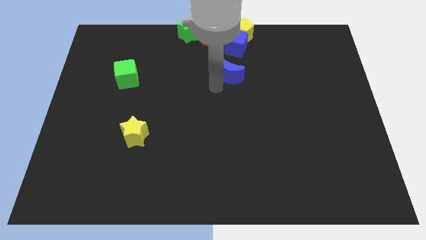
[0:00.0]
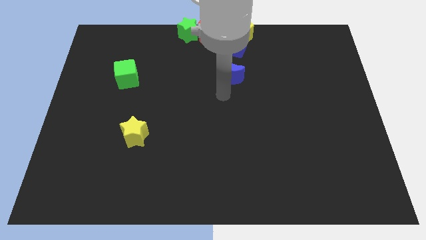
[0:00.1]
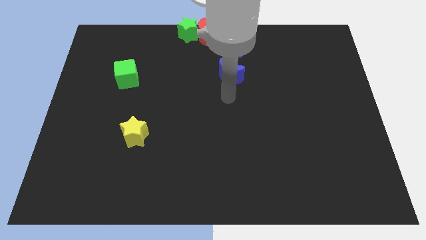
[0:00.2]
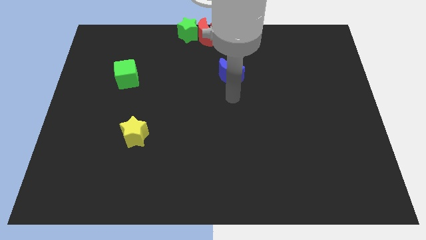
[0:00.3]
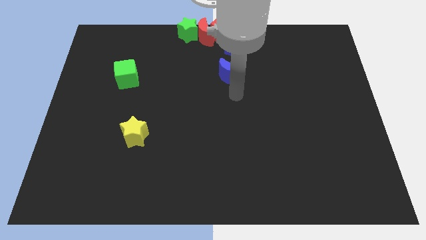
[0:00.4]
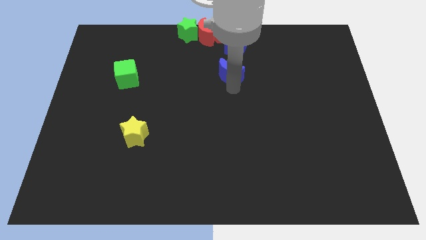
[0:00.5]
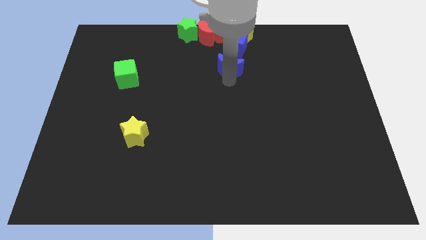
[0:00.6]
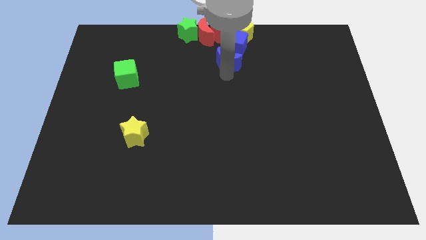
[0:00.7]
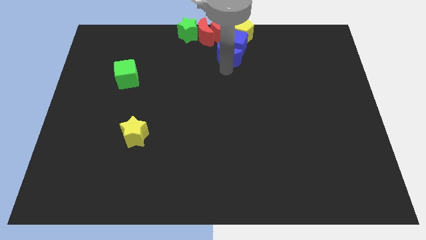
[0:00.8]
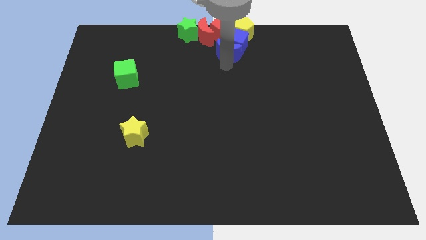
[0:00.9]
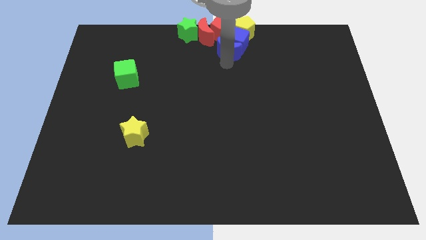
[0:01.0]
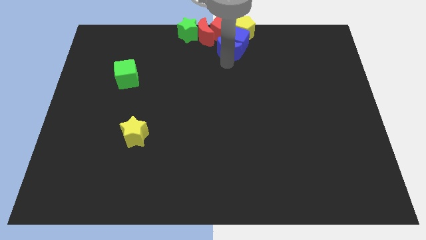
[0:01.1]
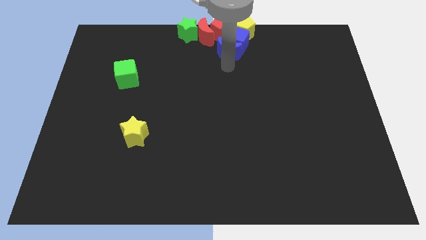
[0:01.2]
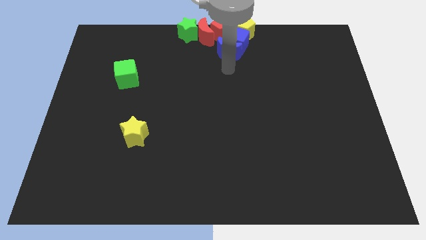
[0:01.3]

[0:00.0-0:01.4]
slide the blue crescent into the blue cube

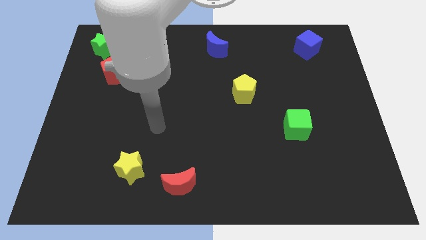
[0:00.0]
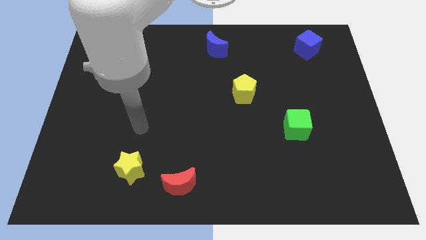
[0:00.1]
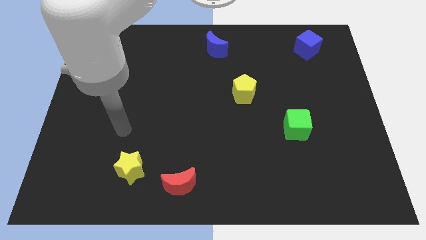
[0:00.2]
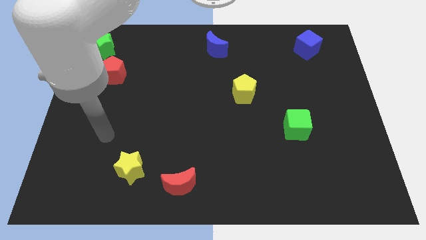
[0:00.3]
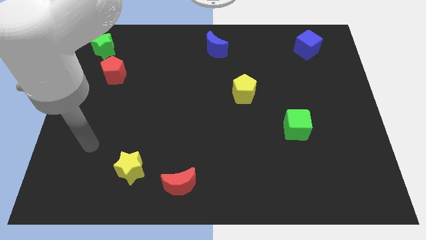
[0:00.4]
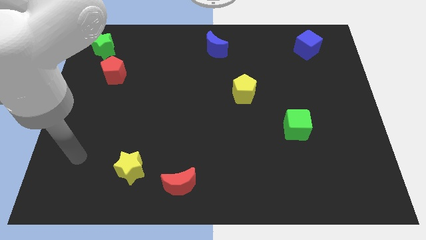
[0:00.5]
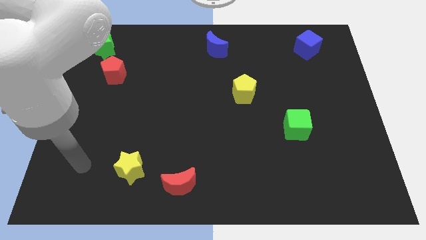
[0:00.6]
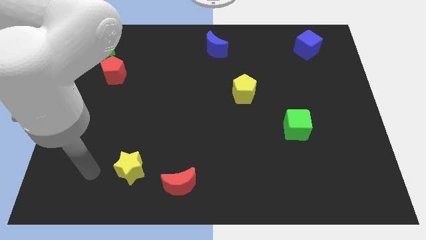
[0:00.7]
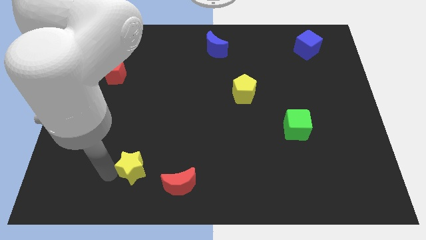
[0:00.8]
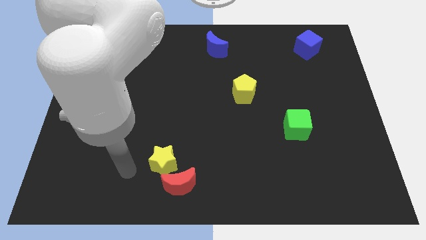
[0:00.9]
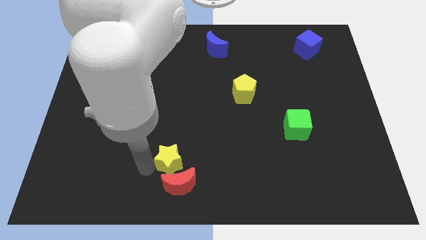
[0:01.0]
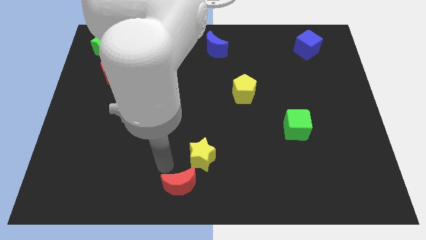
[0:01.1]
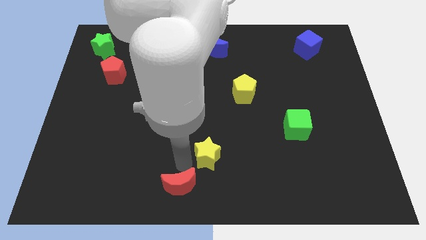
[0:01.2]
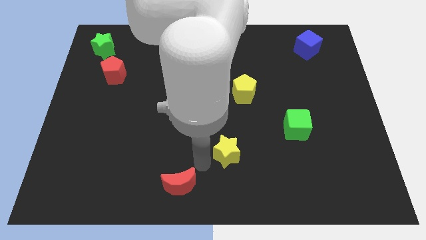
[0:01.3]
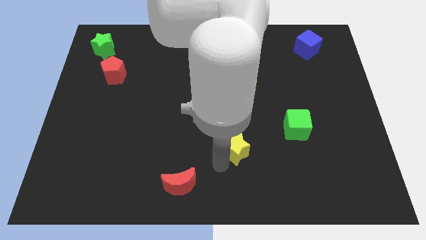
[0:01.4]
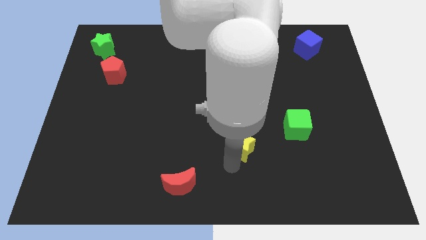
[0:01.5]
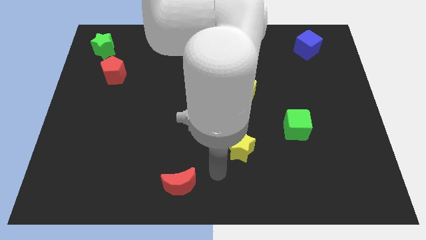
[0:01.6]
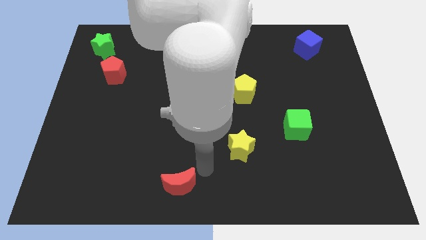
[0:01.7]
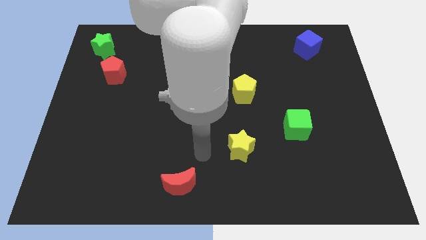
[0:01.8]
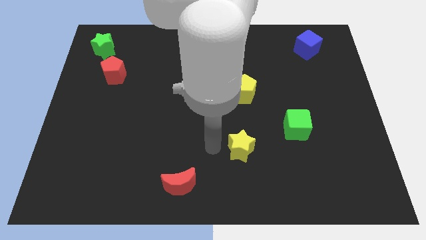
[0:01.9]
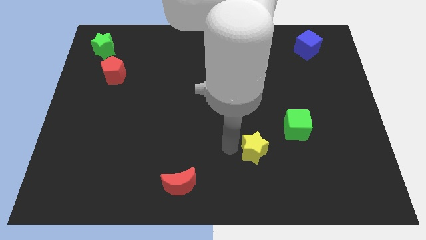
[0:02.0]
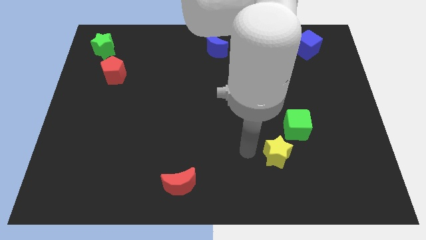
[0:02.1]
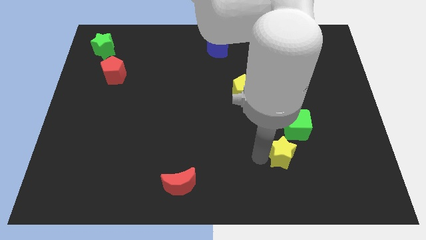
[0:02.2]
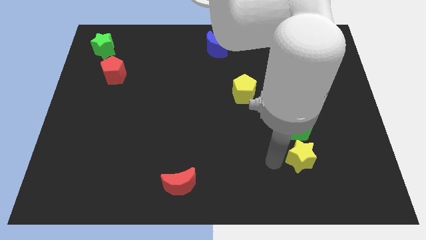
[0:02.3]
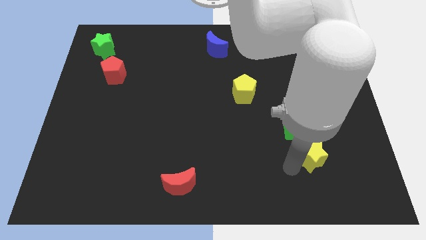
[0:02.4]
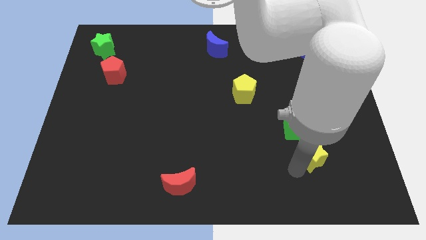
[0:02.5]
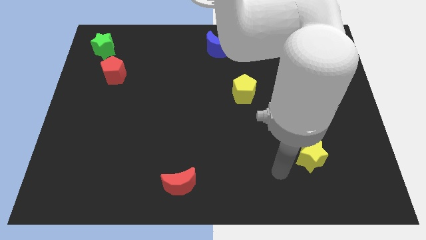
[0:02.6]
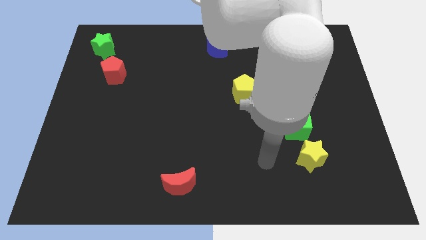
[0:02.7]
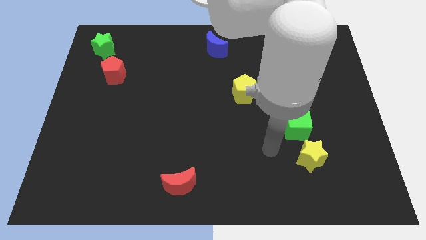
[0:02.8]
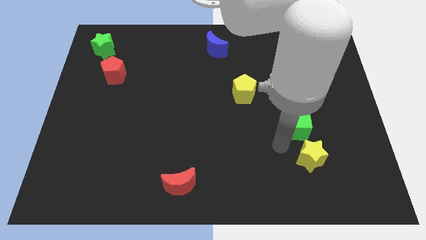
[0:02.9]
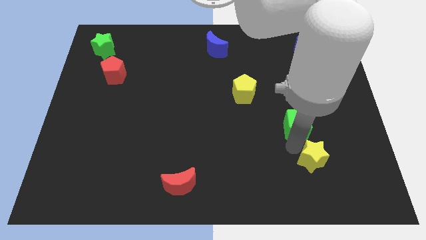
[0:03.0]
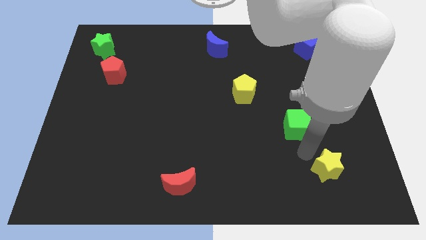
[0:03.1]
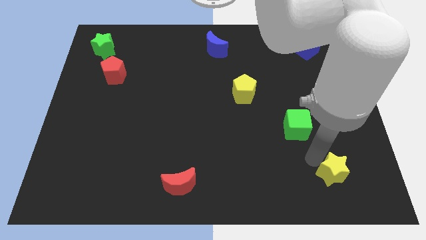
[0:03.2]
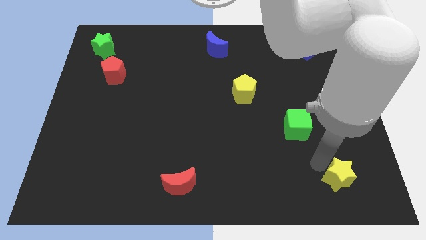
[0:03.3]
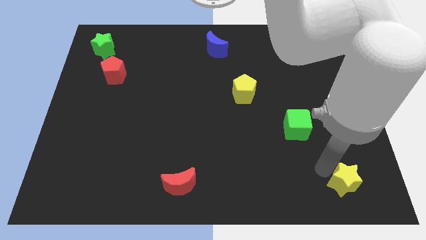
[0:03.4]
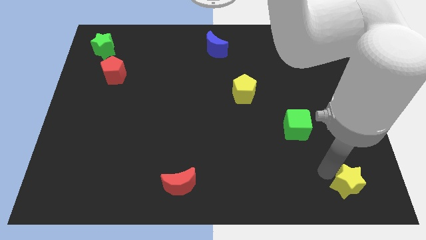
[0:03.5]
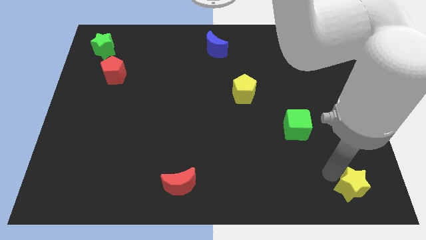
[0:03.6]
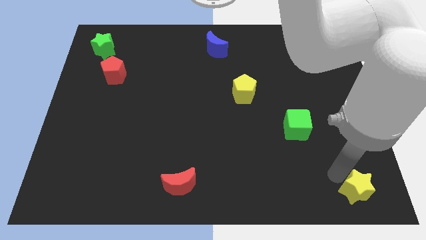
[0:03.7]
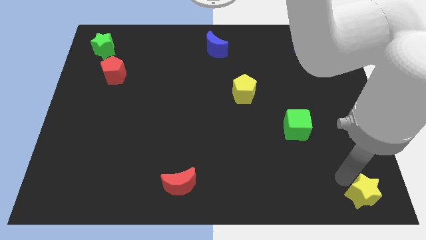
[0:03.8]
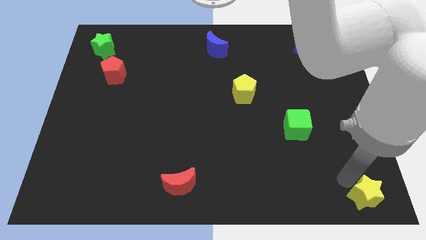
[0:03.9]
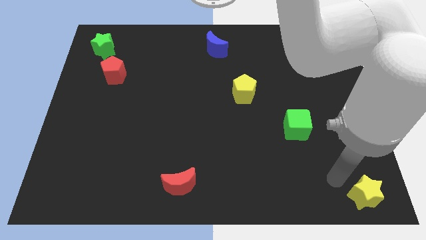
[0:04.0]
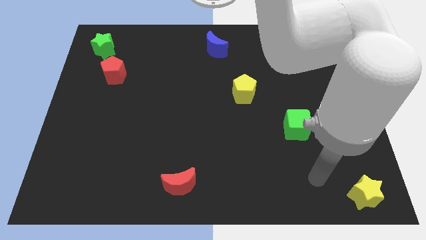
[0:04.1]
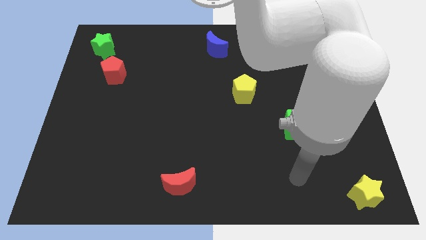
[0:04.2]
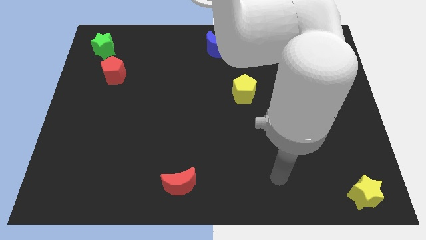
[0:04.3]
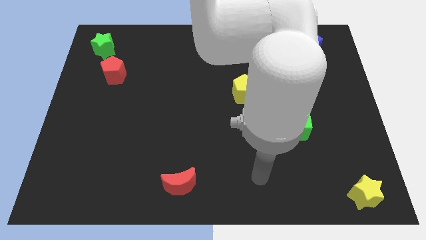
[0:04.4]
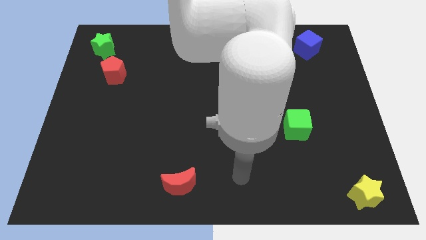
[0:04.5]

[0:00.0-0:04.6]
move the yellow star to the bottom right

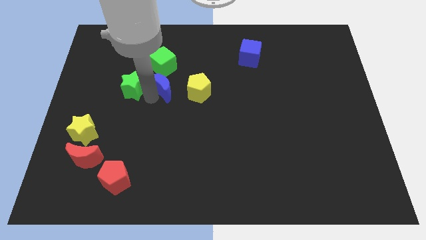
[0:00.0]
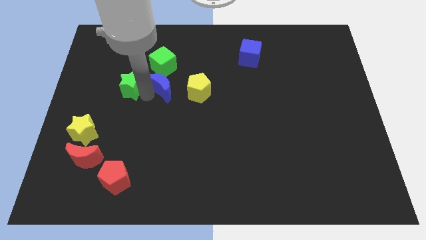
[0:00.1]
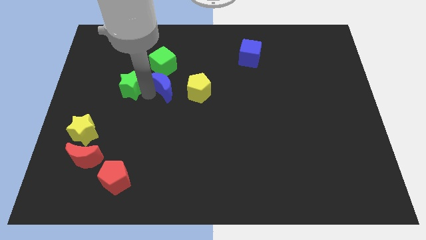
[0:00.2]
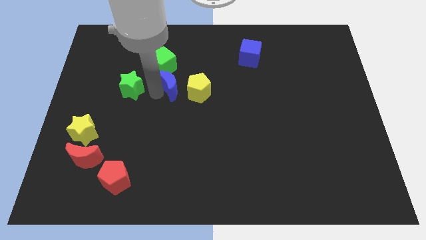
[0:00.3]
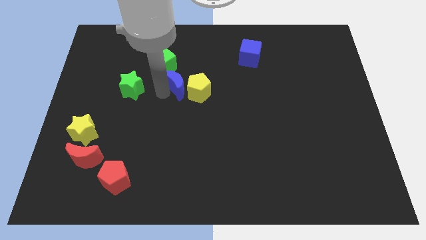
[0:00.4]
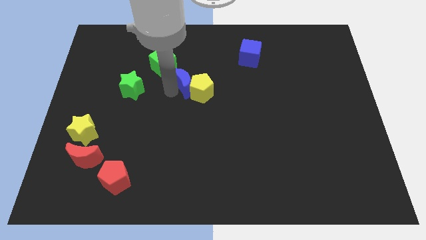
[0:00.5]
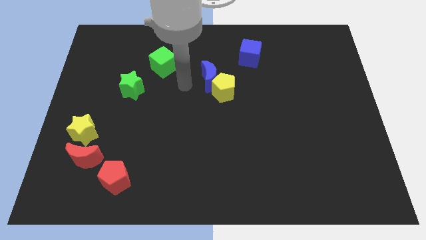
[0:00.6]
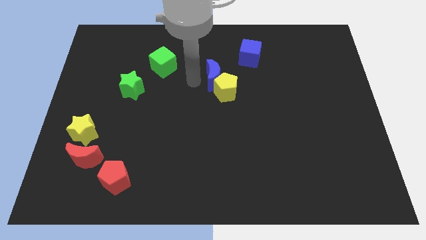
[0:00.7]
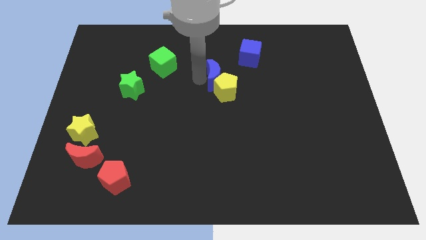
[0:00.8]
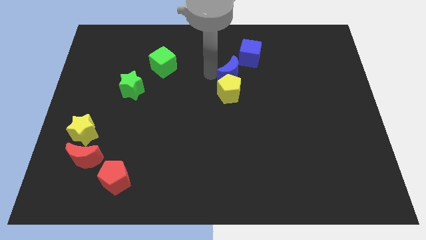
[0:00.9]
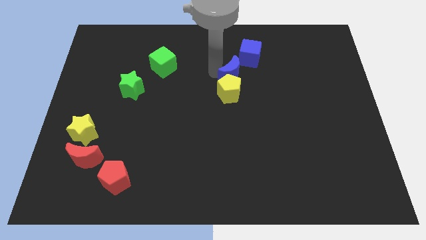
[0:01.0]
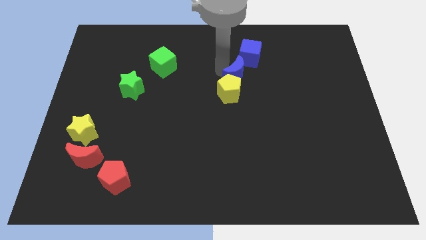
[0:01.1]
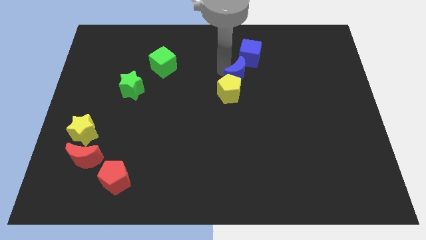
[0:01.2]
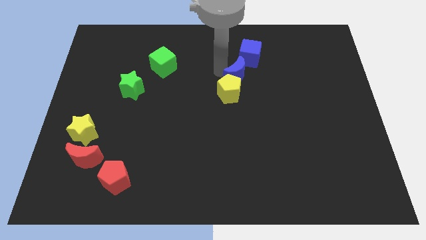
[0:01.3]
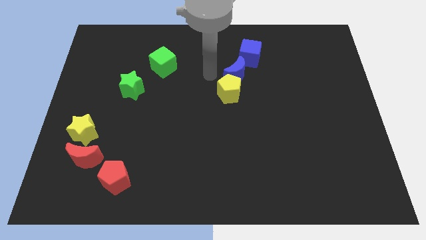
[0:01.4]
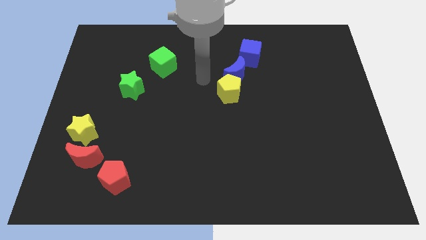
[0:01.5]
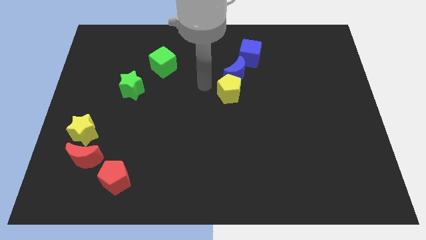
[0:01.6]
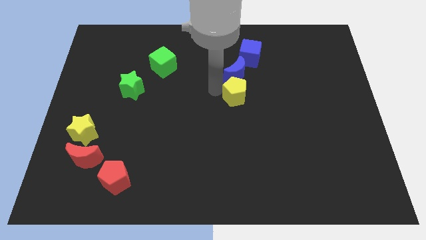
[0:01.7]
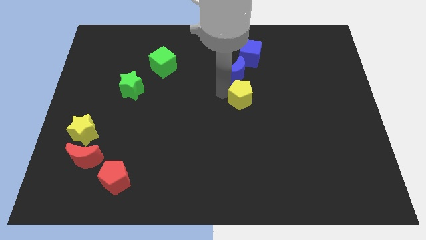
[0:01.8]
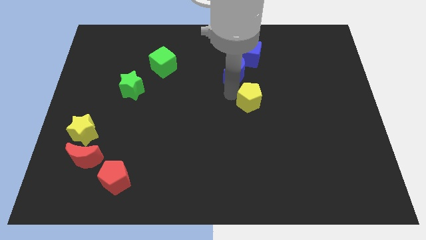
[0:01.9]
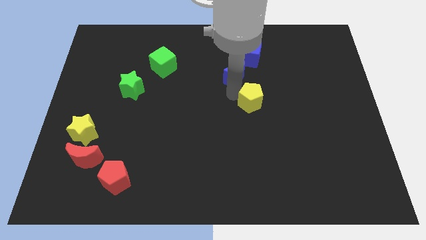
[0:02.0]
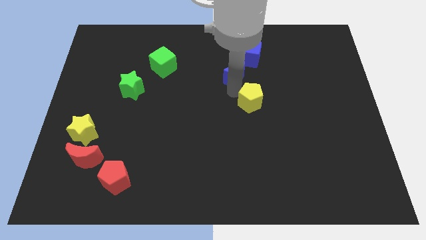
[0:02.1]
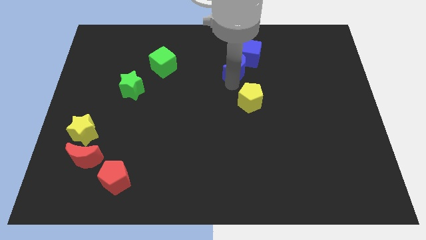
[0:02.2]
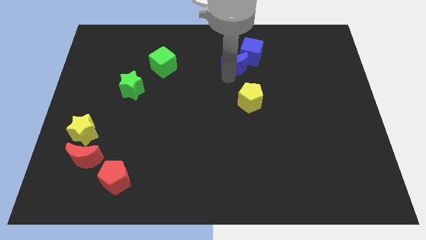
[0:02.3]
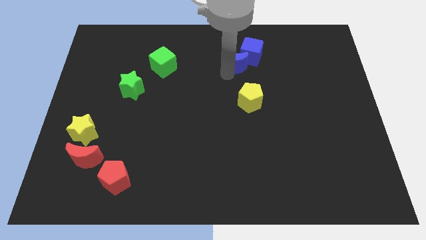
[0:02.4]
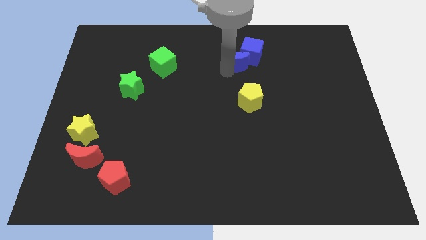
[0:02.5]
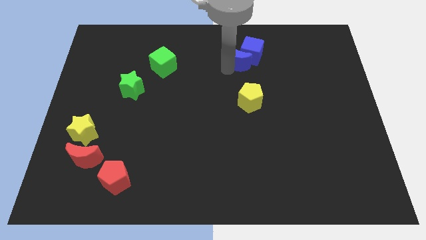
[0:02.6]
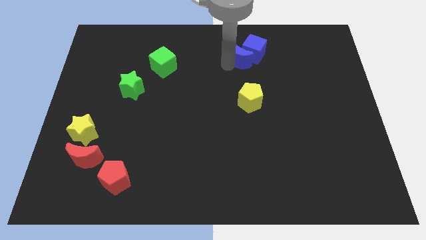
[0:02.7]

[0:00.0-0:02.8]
push blue moon in to blue cube

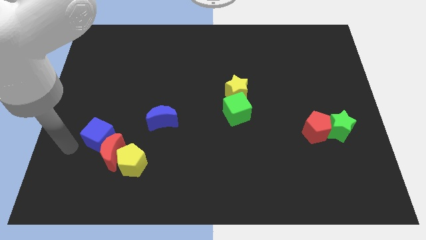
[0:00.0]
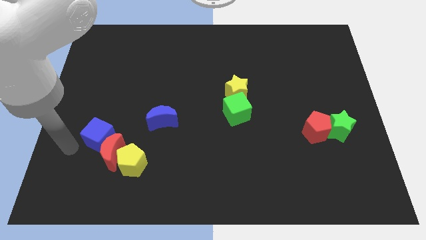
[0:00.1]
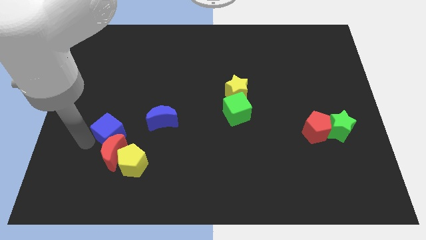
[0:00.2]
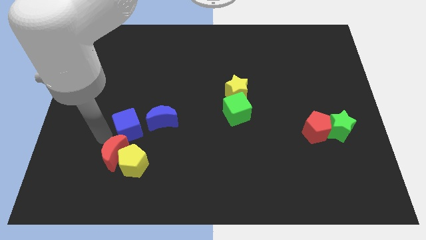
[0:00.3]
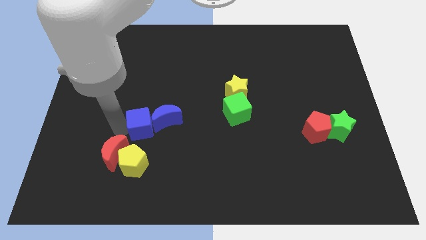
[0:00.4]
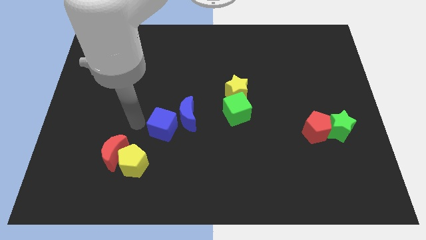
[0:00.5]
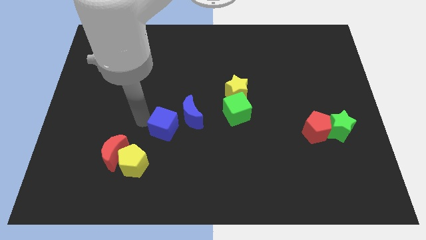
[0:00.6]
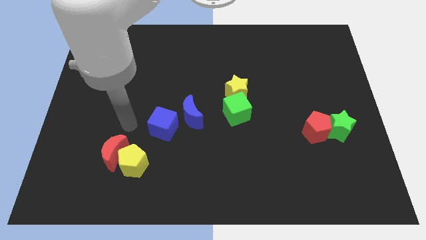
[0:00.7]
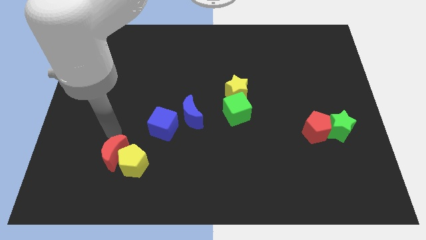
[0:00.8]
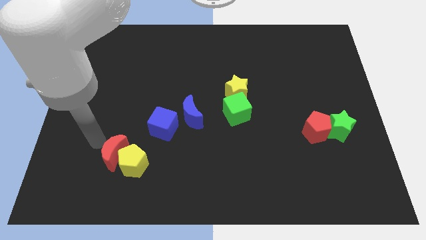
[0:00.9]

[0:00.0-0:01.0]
place the blue cube parallel left to the blue moon
